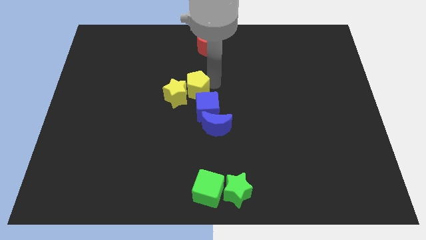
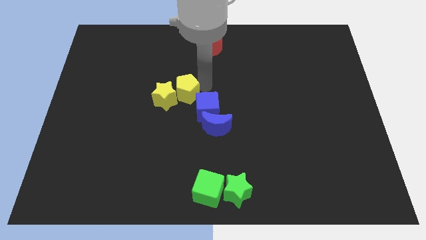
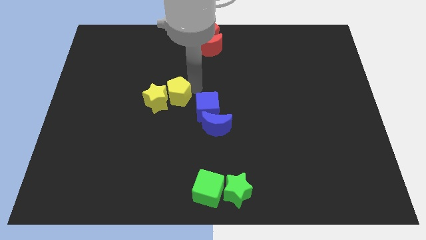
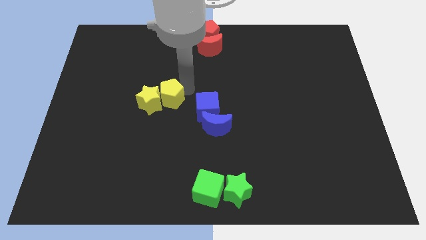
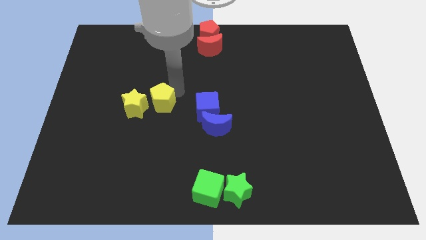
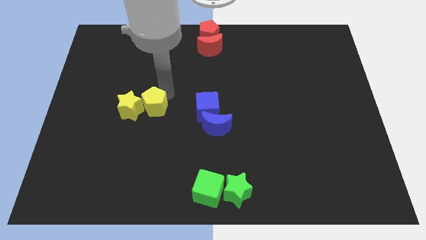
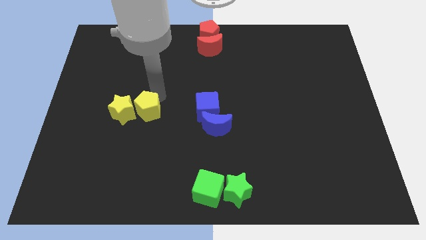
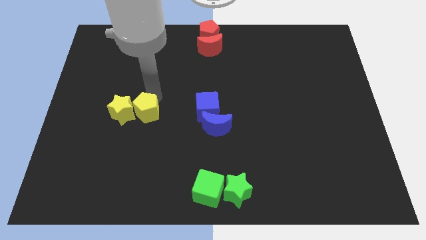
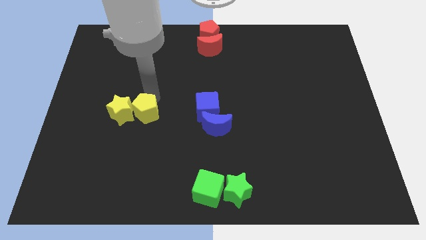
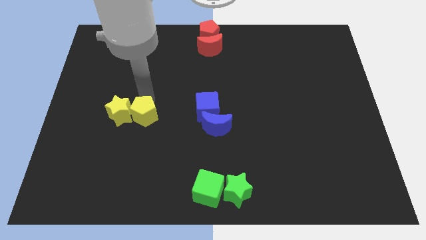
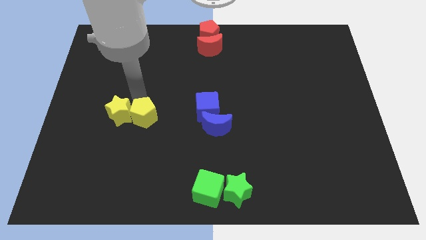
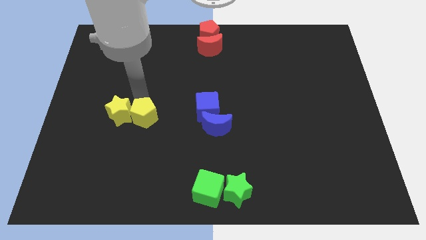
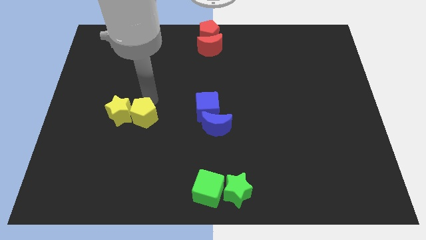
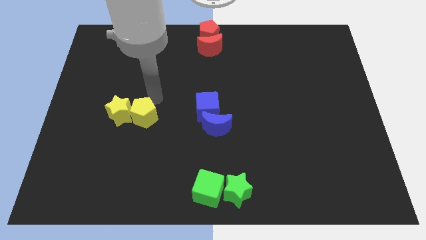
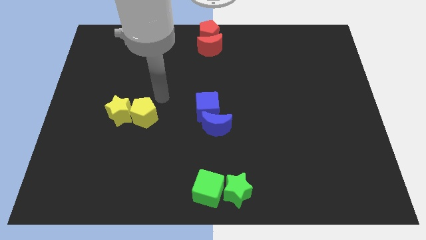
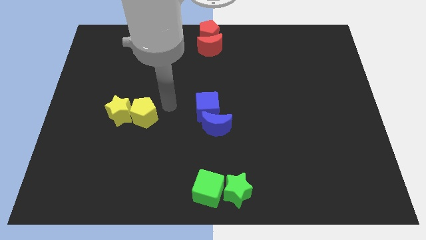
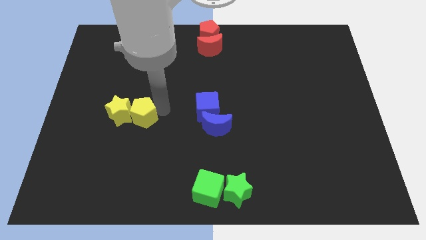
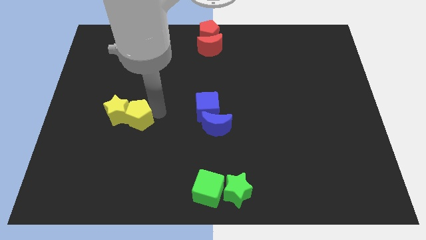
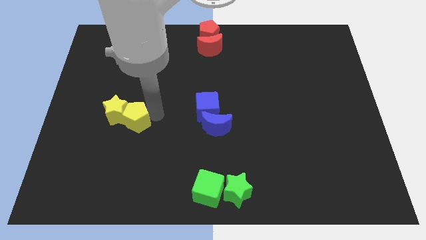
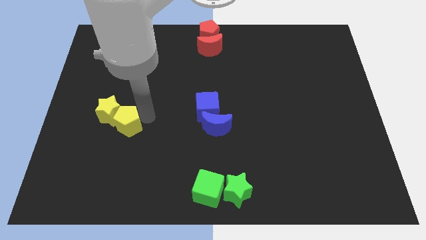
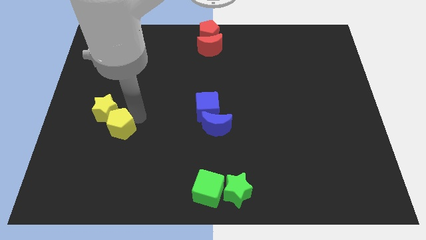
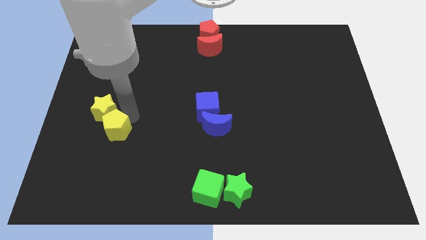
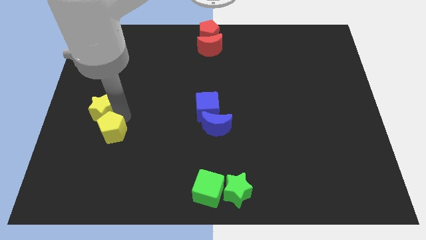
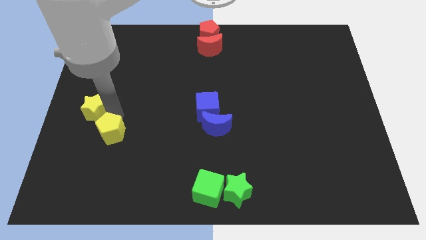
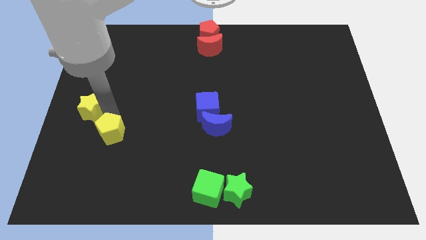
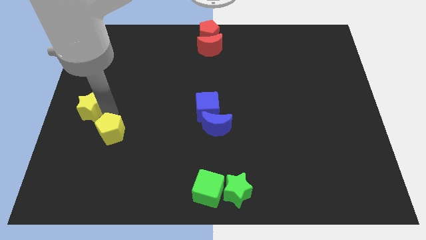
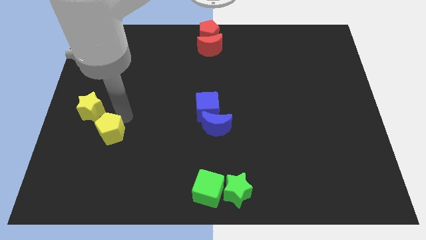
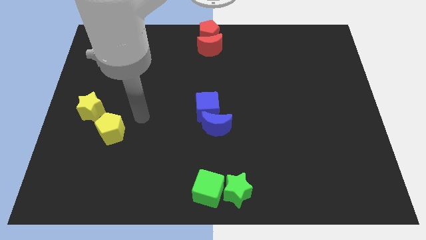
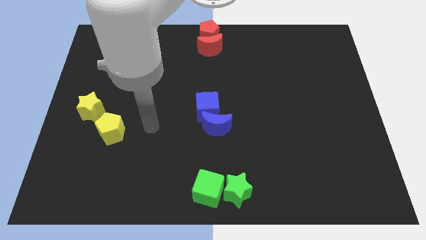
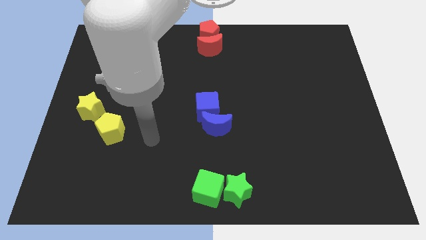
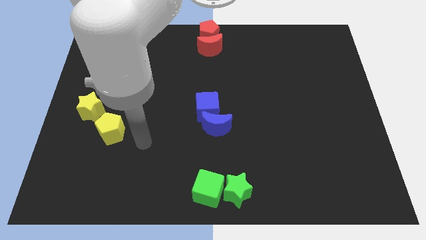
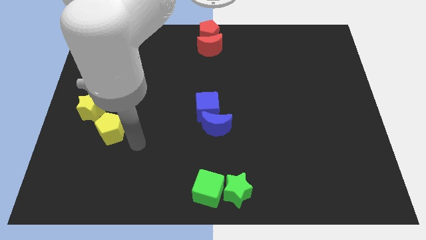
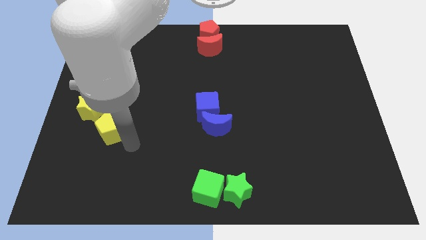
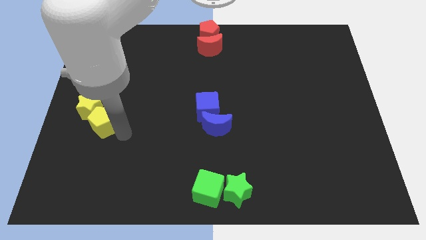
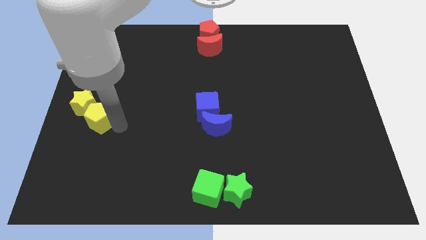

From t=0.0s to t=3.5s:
push the yellow pentagon and yellow star towards the left side of the board

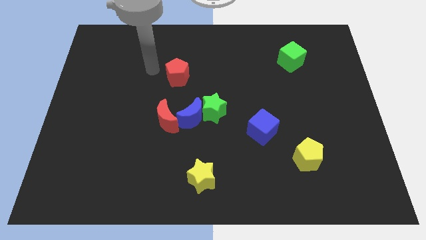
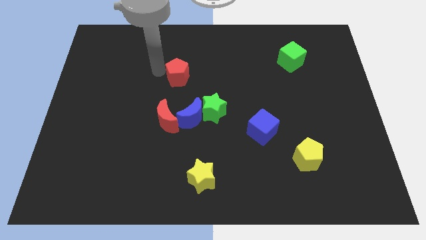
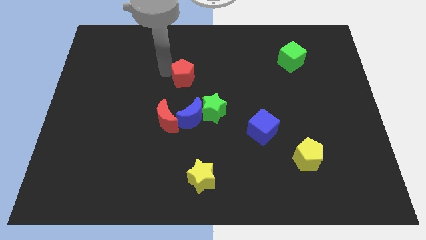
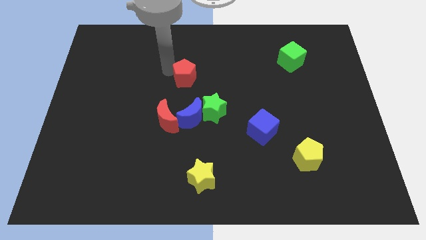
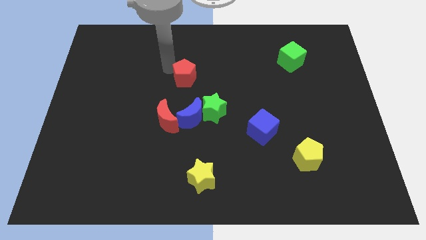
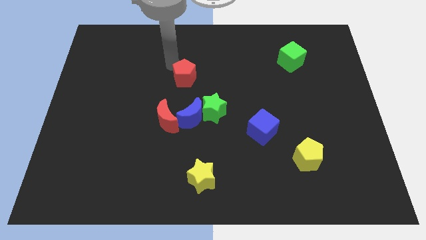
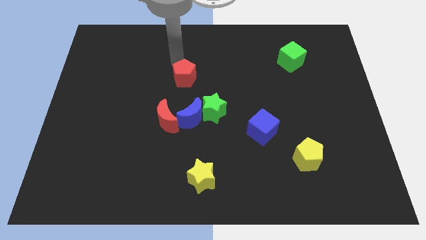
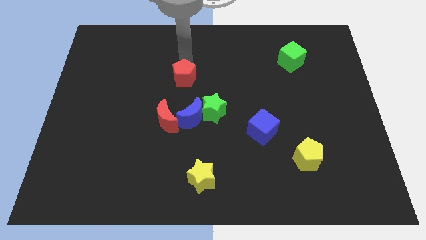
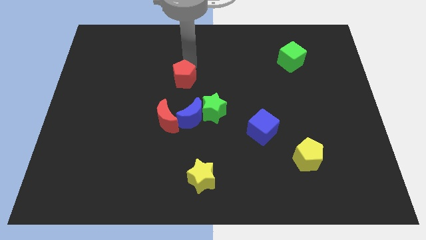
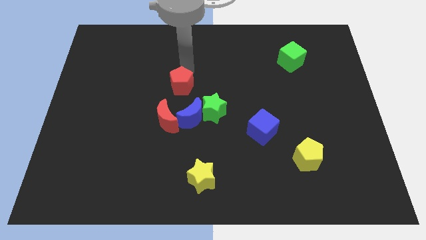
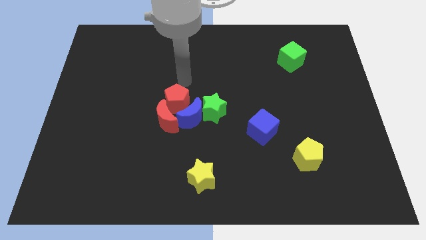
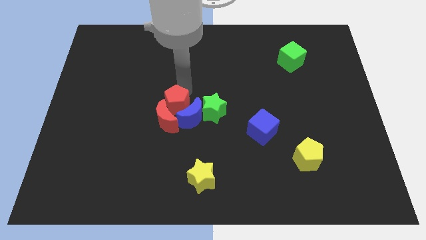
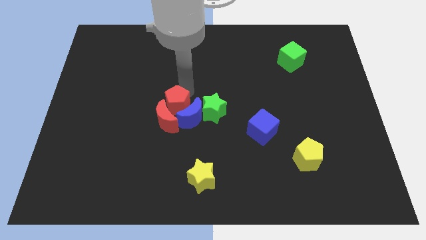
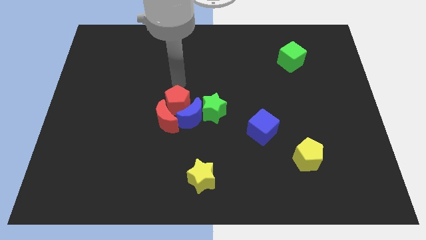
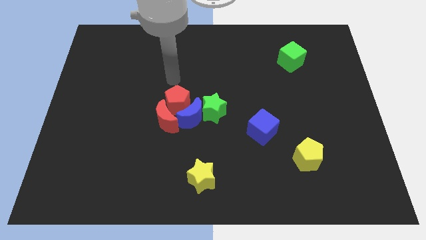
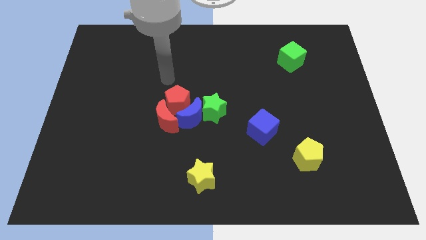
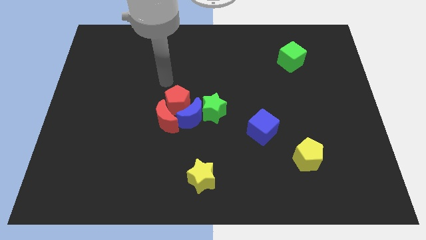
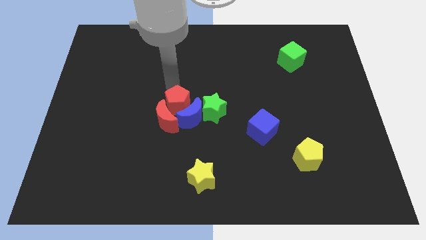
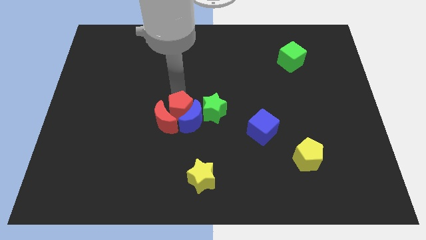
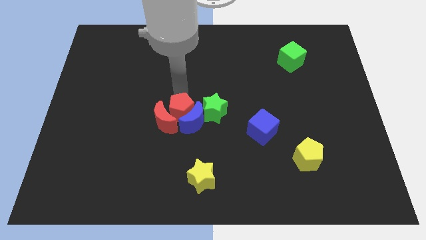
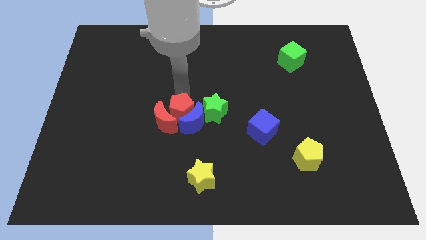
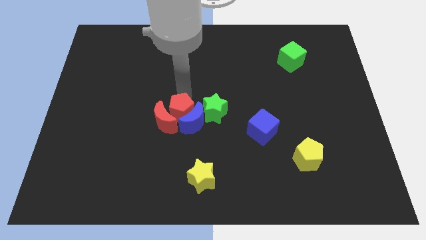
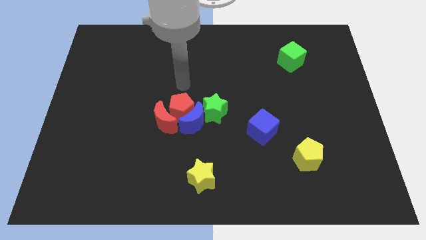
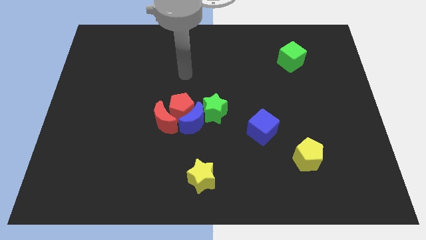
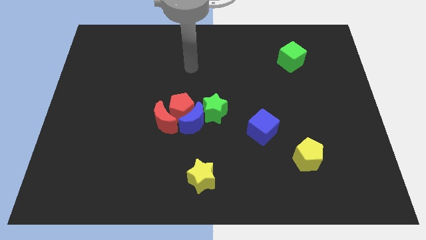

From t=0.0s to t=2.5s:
push the red pentagon into red and blue crescents

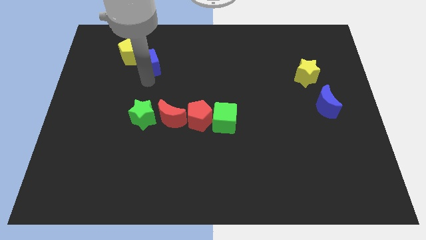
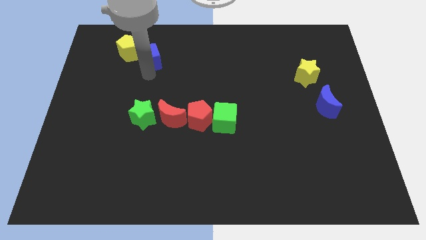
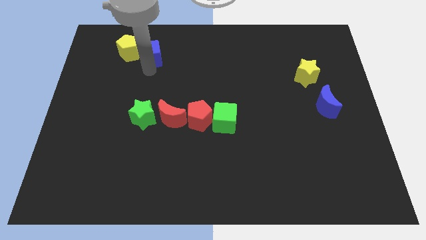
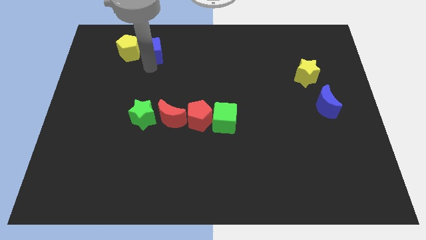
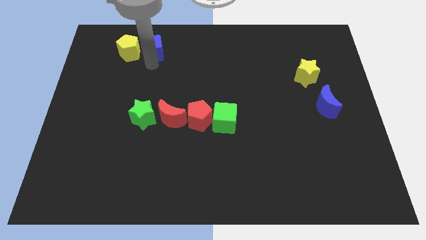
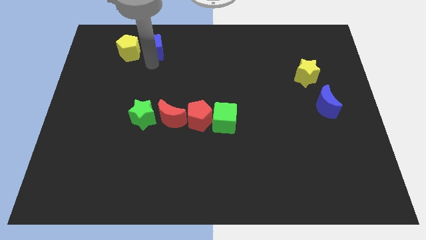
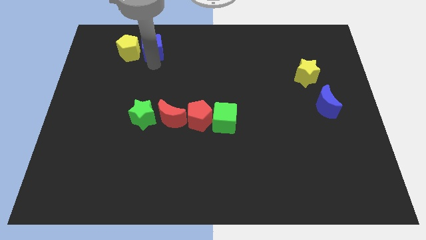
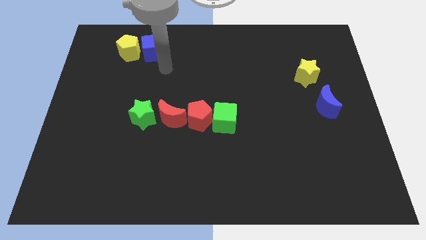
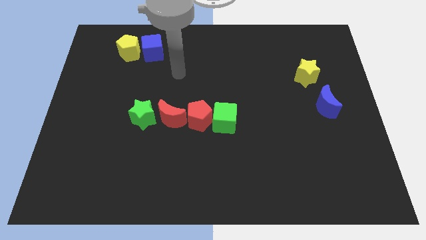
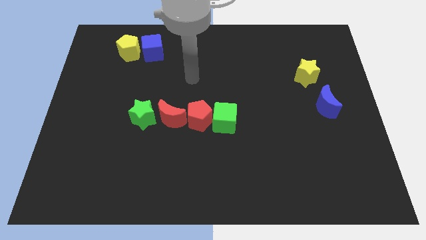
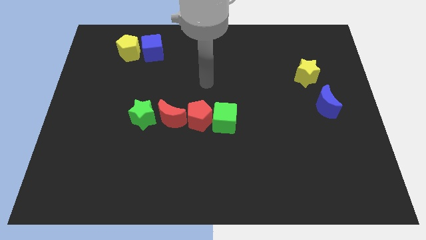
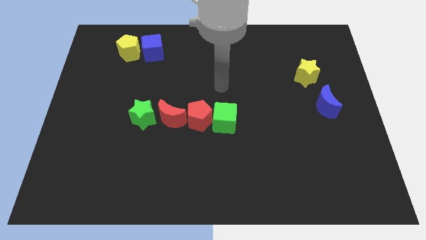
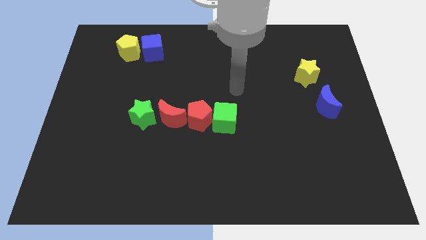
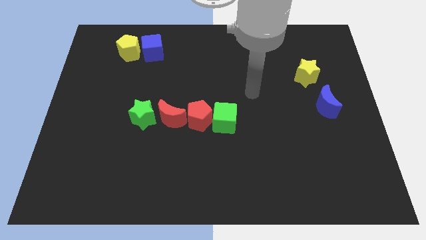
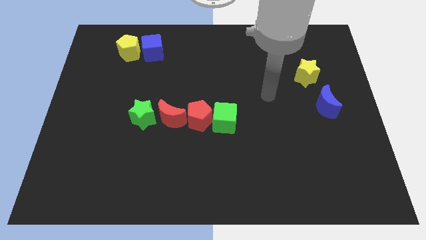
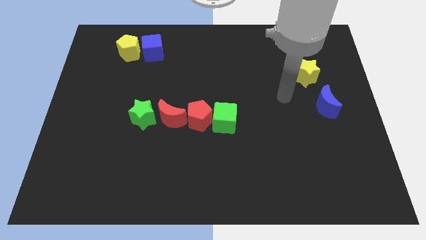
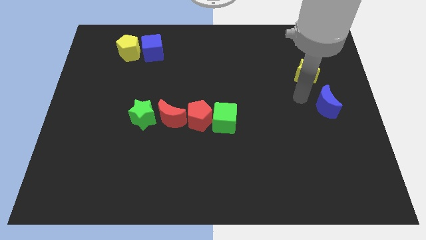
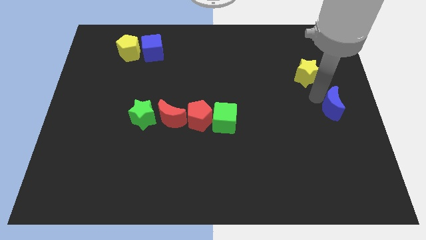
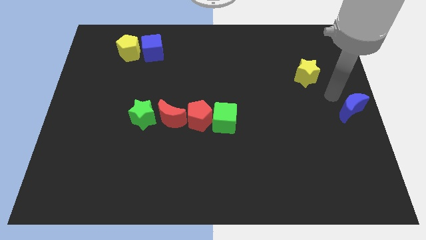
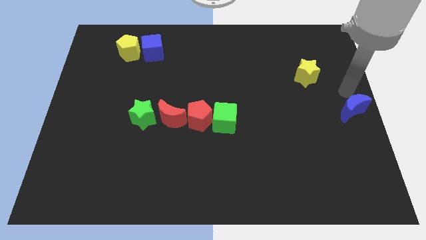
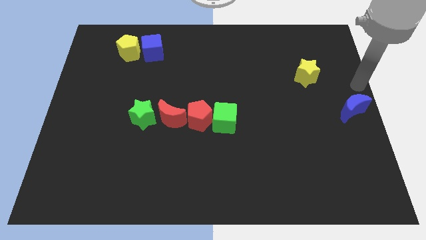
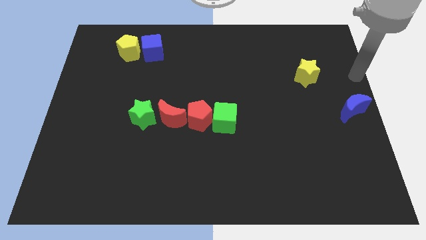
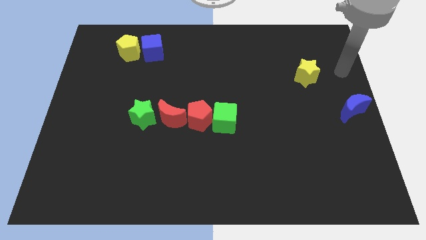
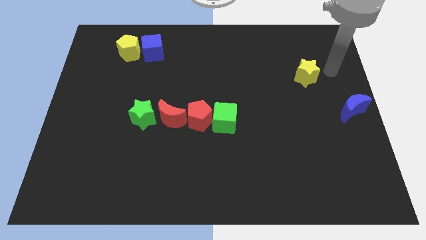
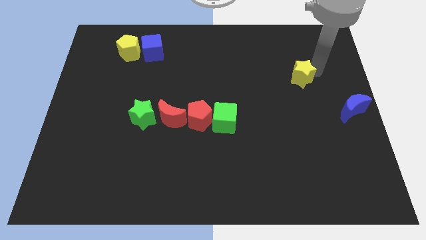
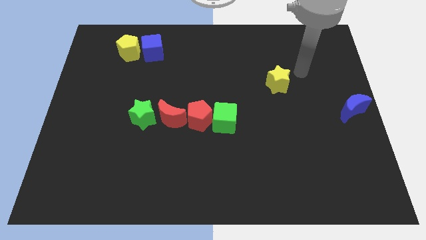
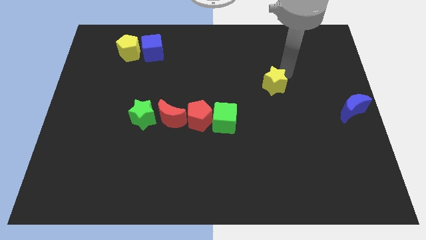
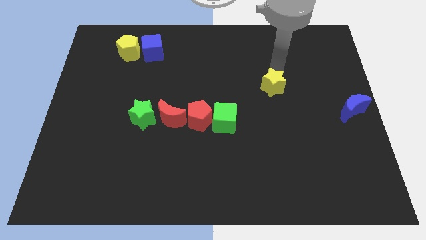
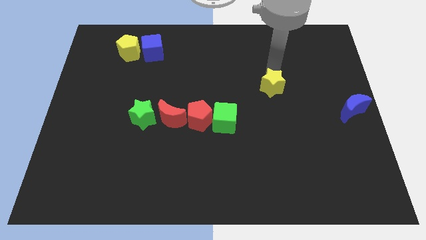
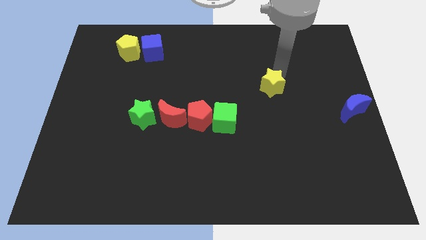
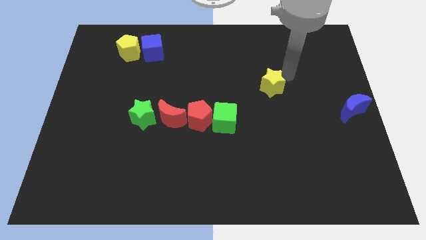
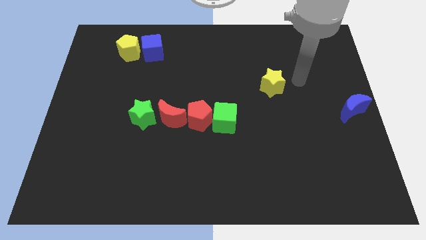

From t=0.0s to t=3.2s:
move star slightly towards the center
